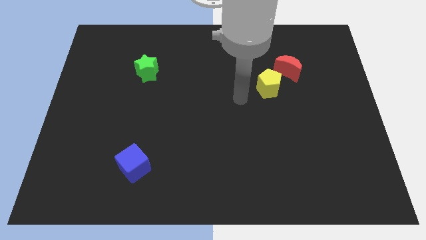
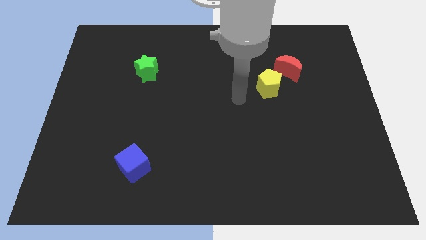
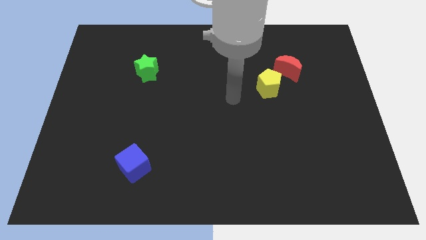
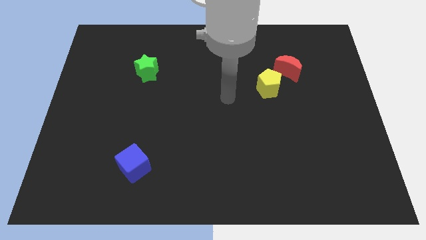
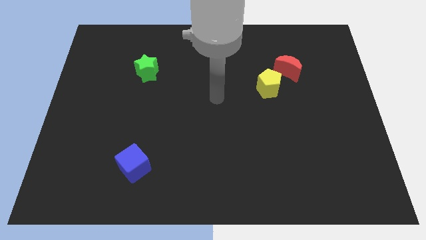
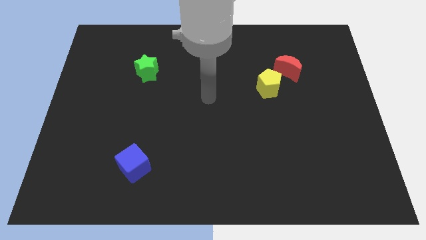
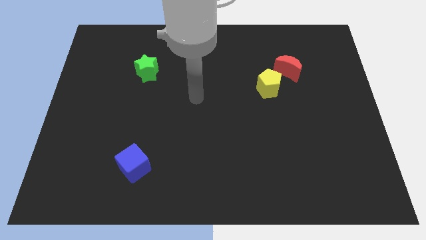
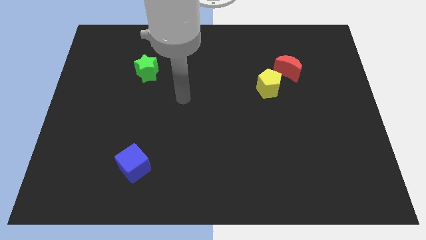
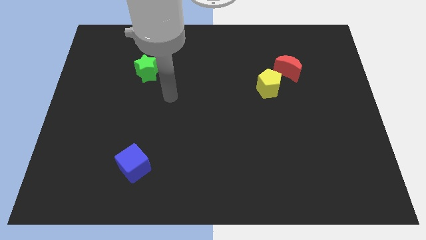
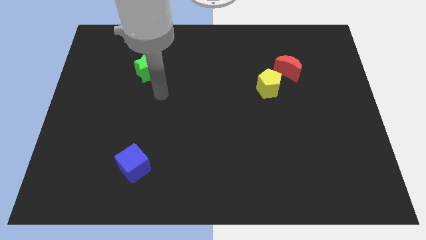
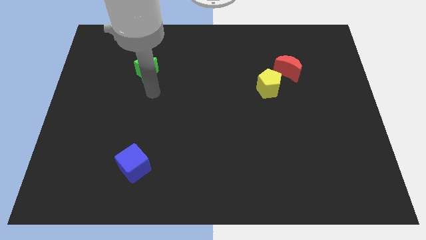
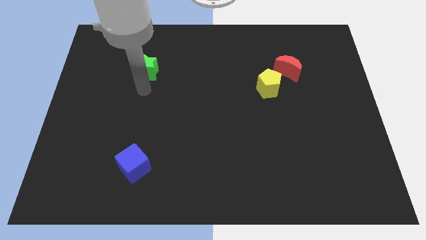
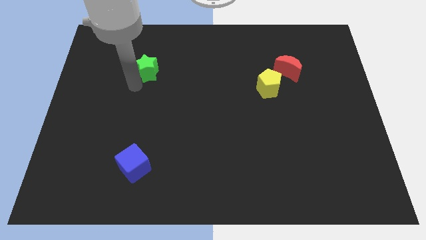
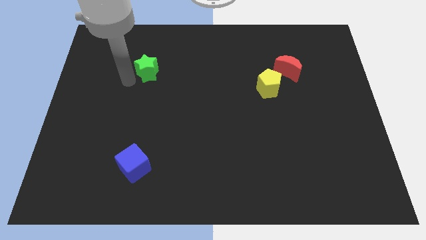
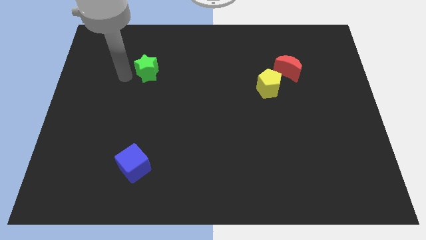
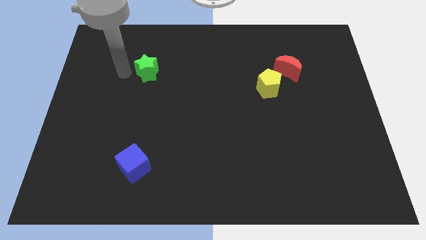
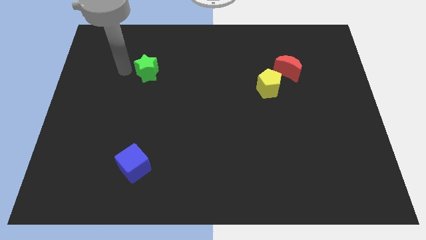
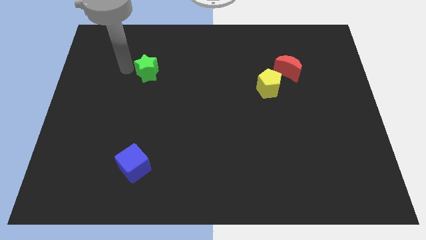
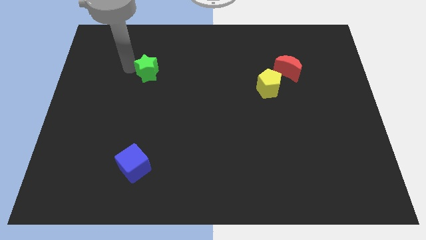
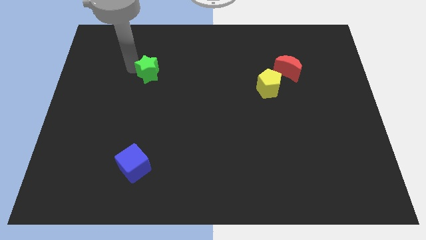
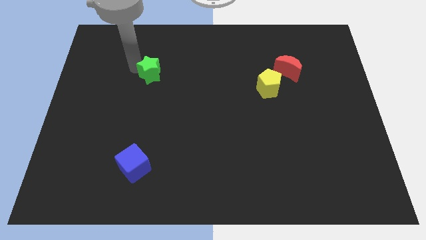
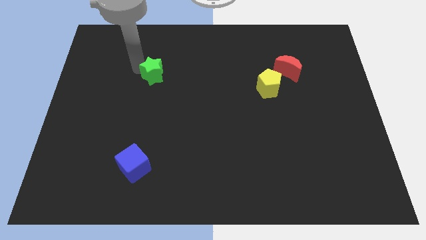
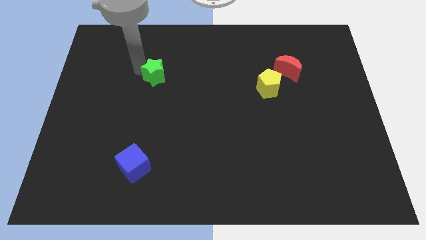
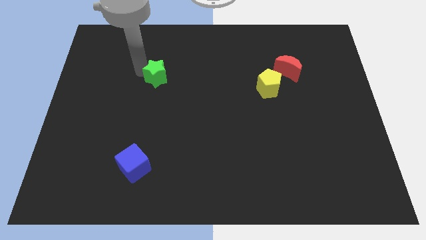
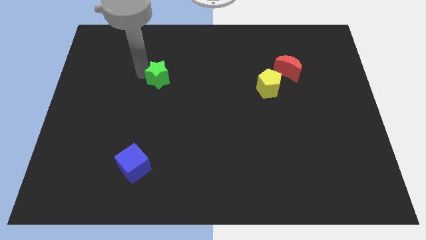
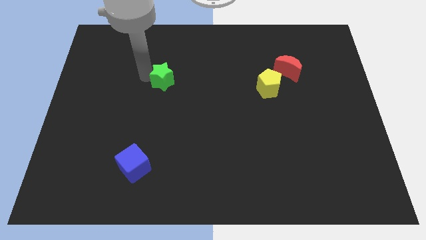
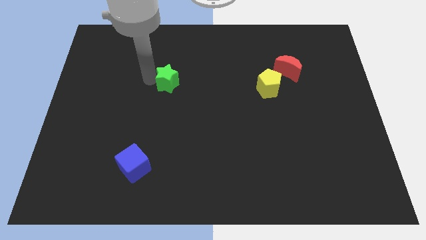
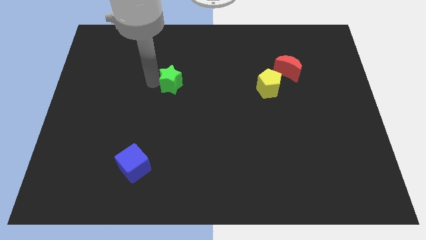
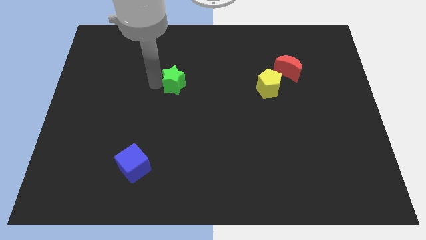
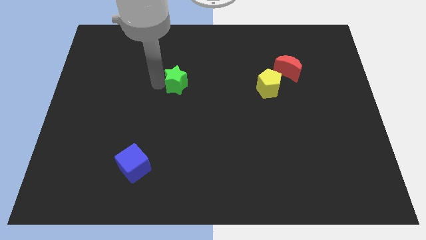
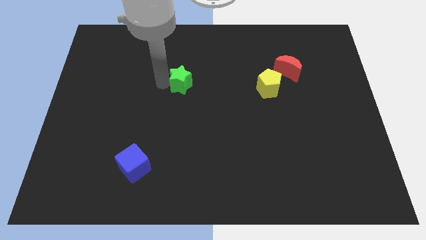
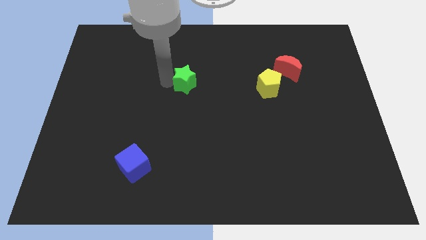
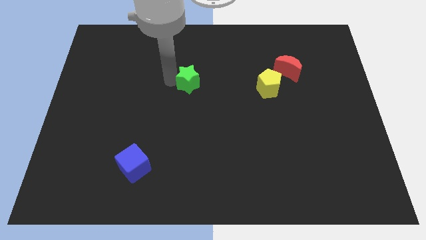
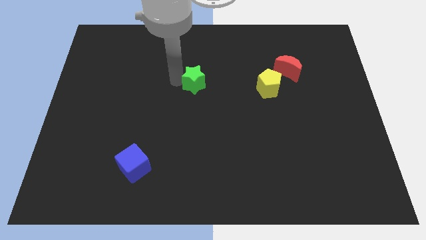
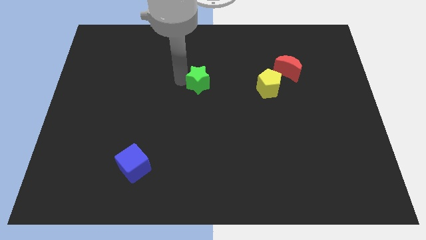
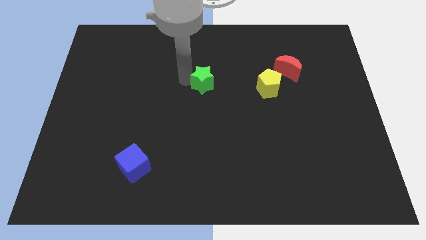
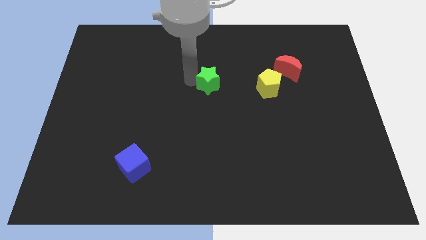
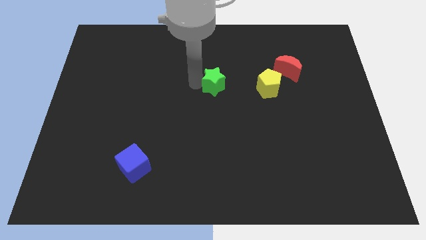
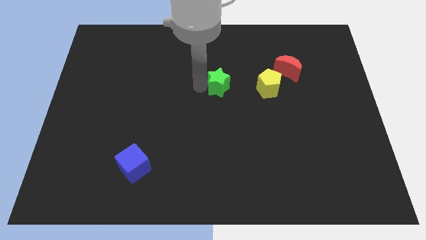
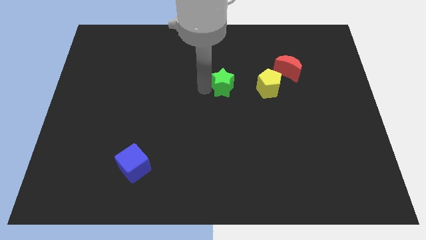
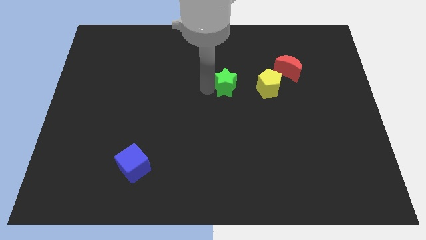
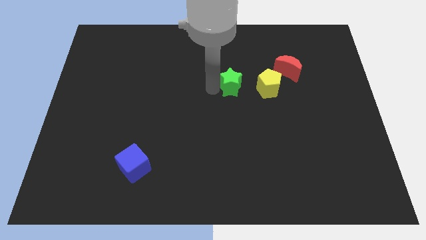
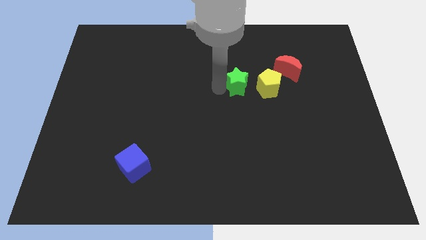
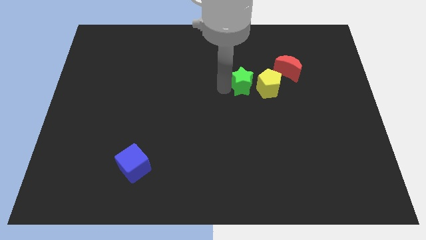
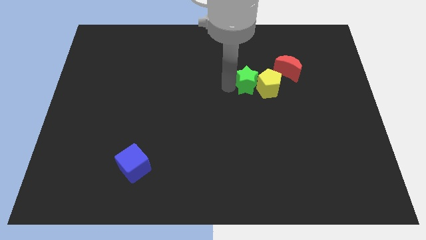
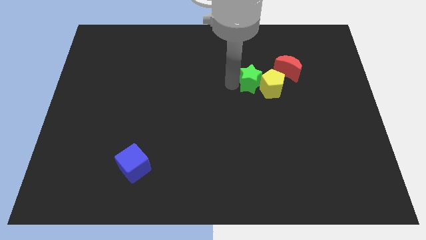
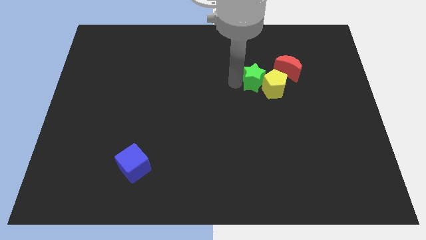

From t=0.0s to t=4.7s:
slide the green block close to the pentagon

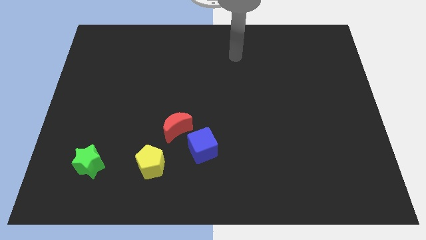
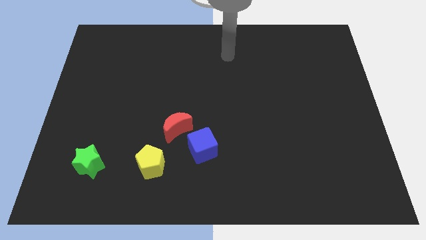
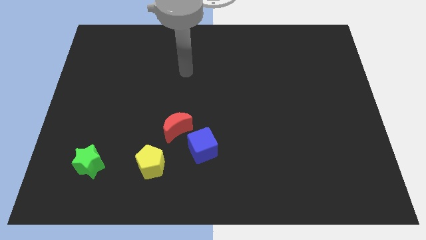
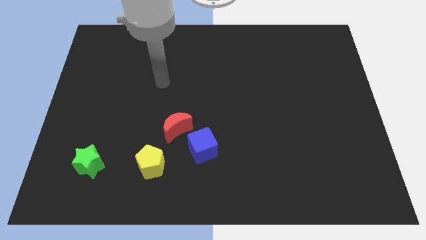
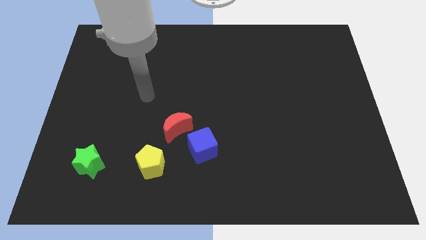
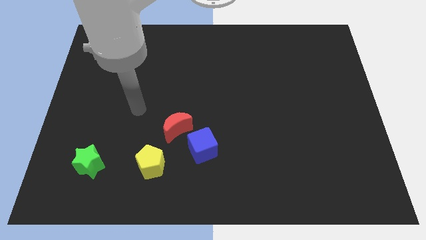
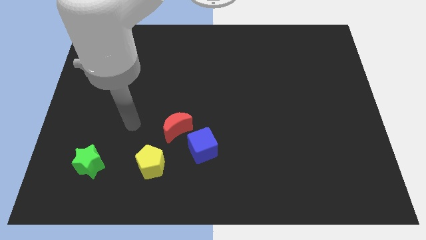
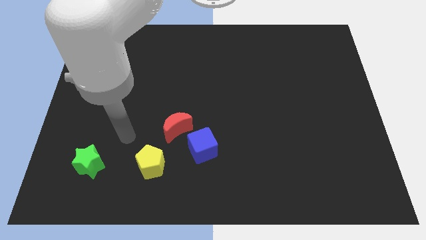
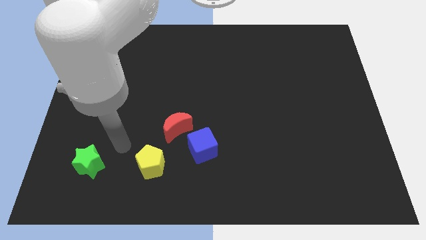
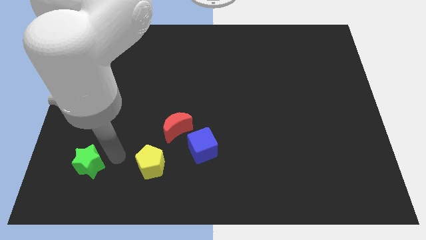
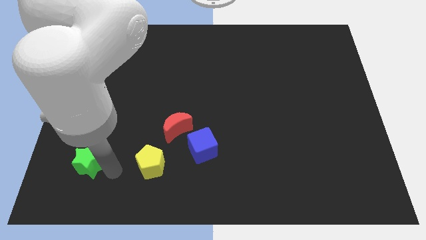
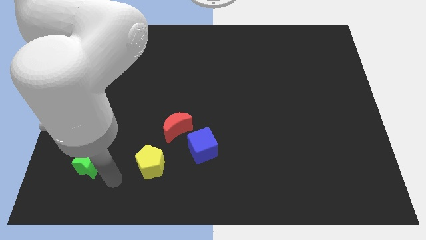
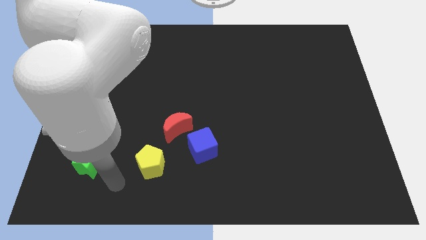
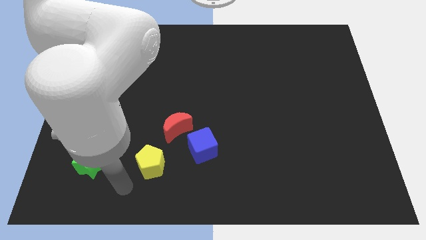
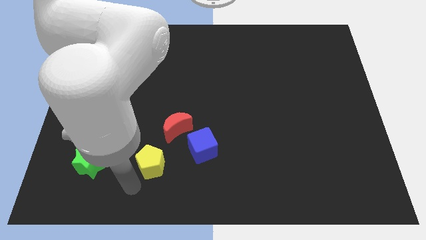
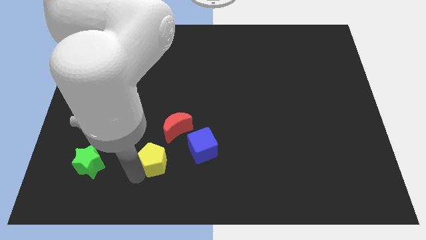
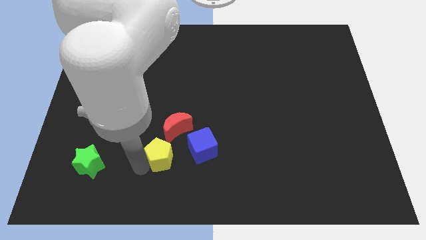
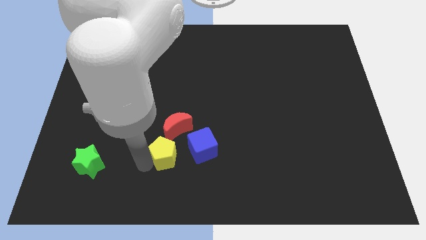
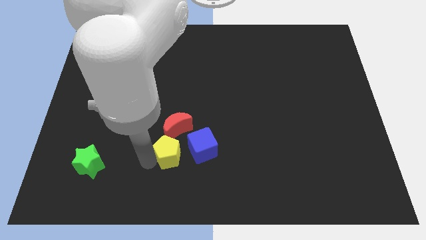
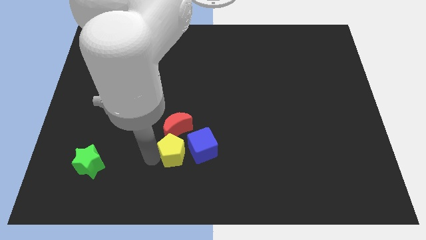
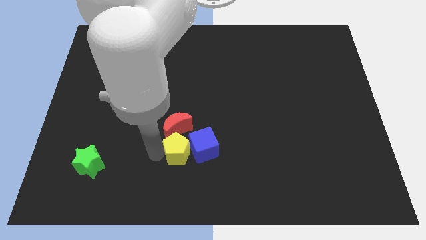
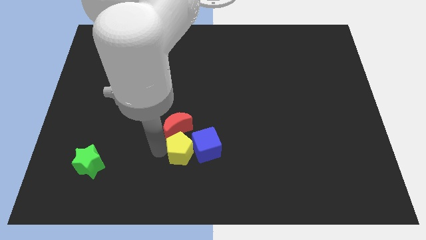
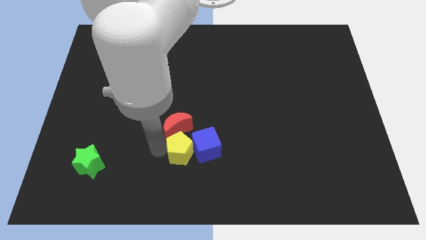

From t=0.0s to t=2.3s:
push the yellow block to the moon

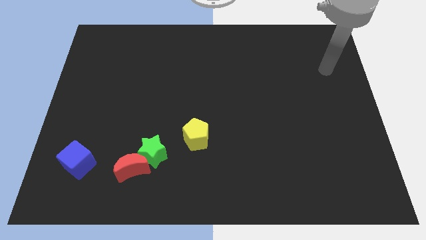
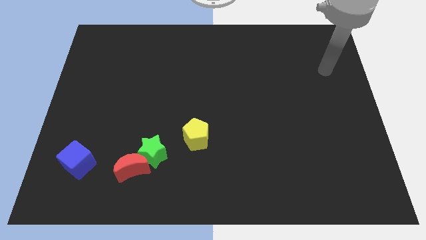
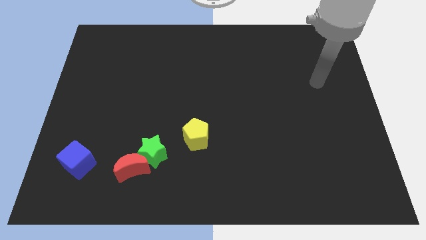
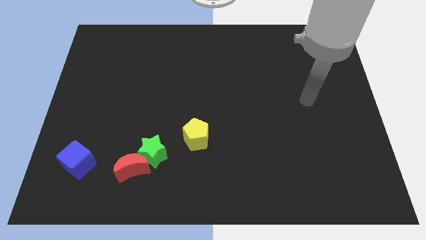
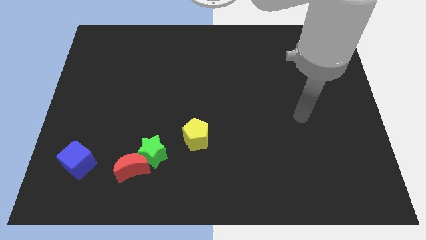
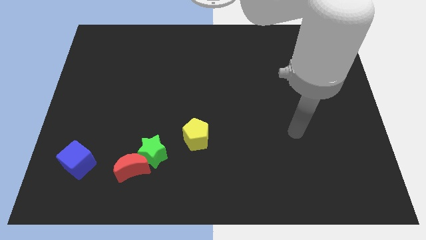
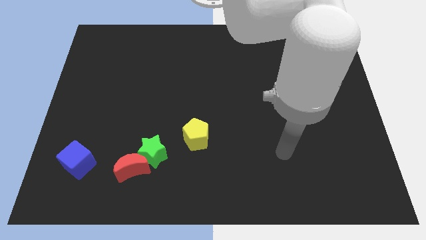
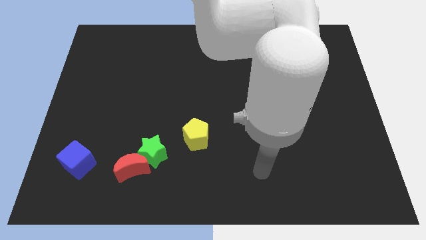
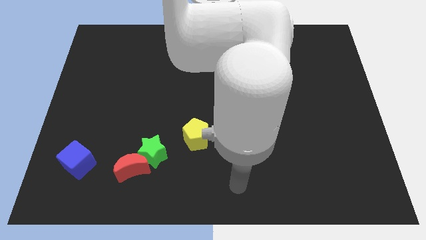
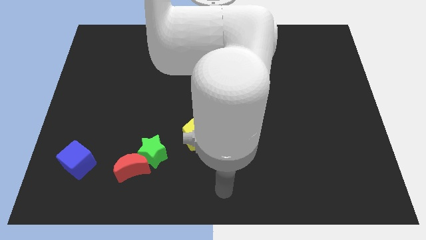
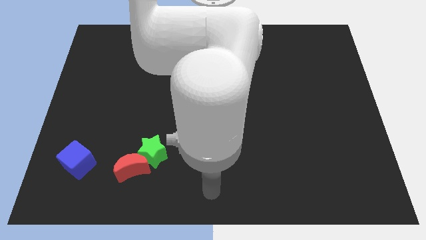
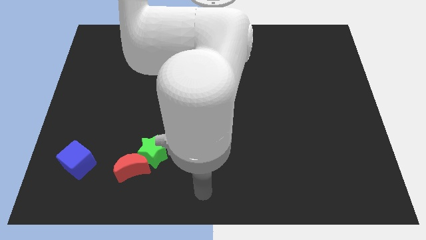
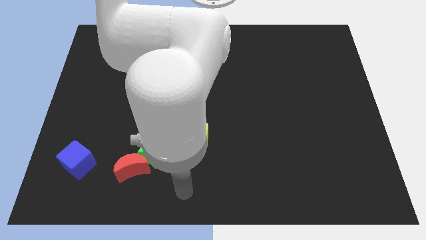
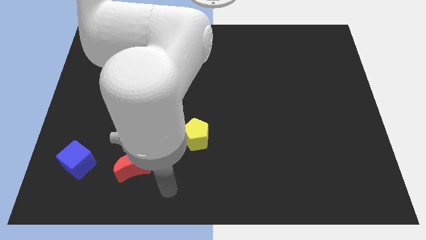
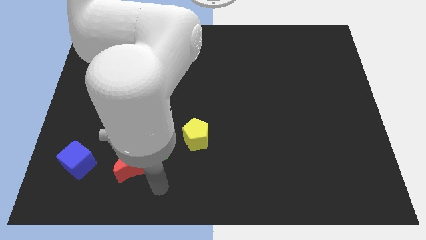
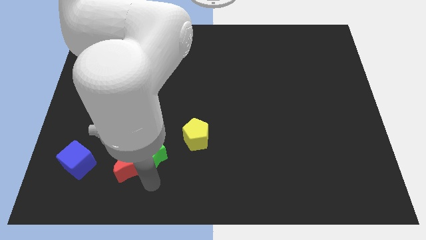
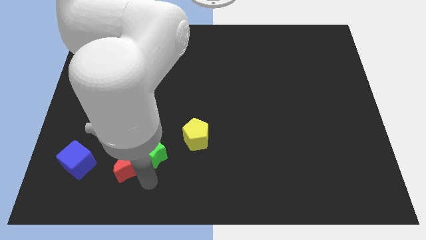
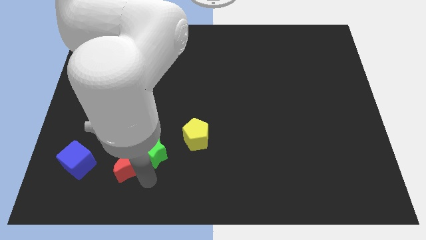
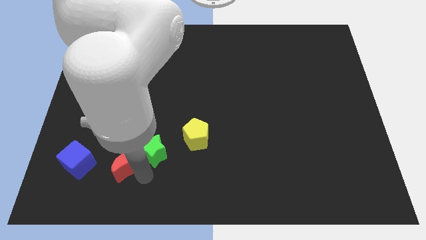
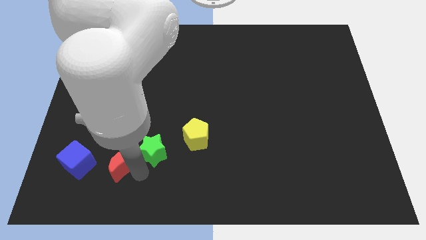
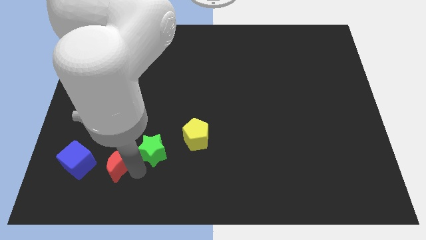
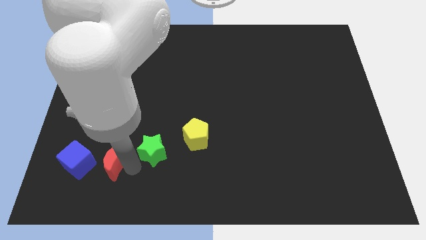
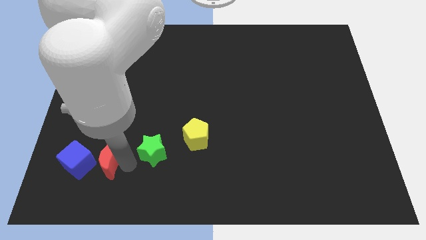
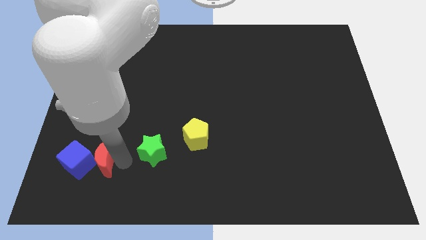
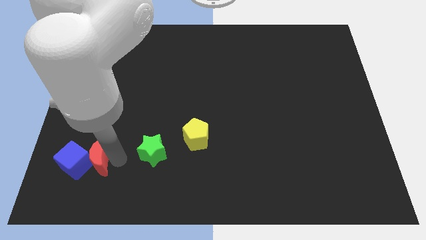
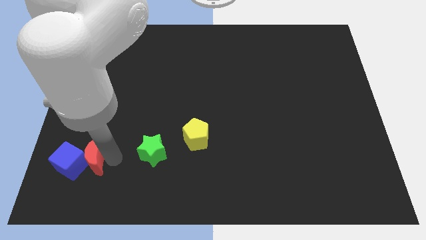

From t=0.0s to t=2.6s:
push the red block close to the cube
